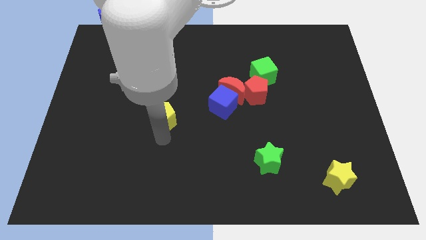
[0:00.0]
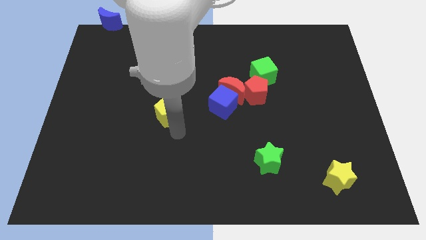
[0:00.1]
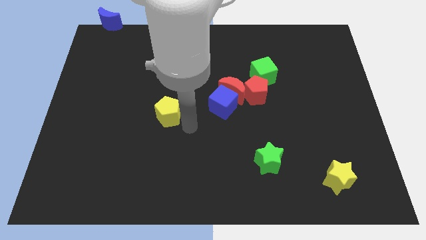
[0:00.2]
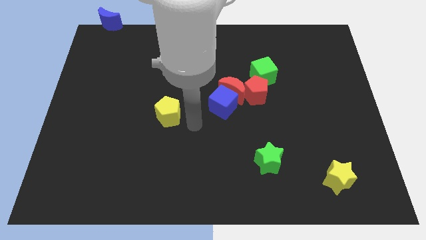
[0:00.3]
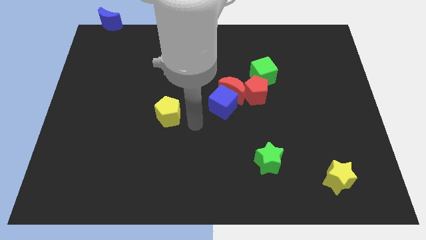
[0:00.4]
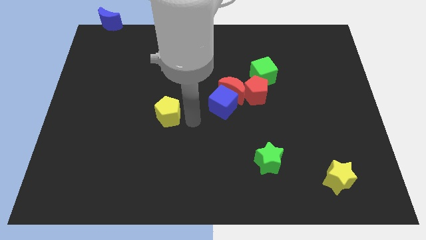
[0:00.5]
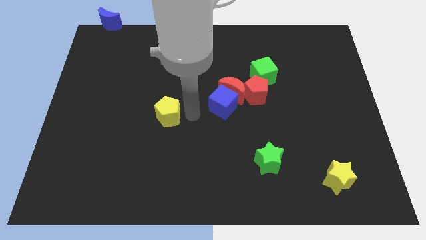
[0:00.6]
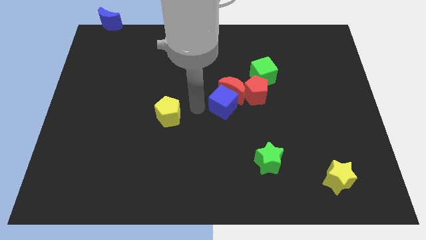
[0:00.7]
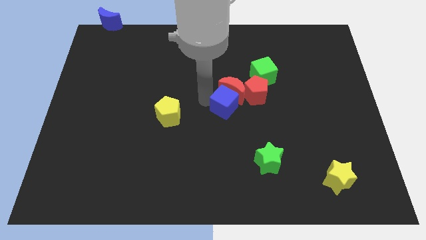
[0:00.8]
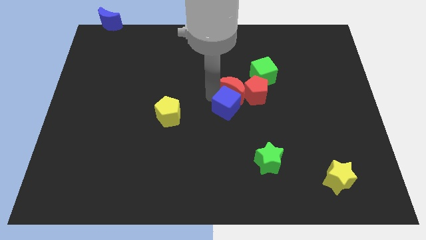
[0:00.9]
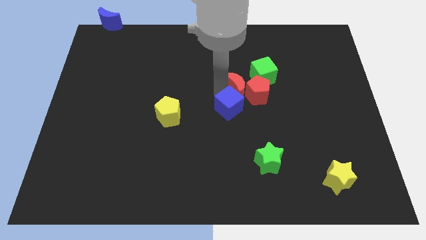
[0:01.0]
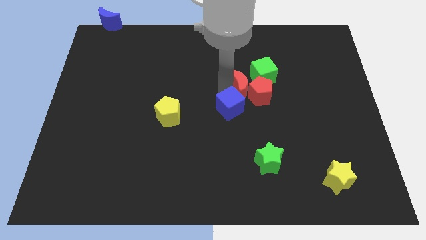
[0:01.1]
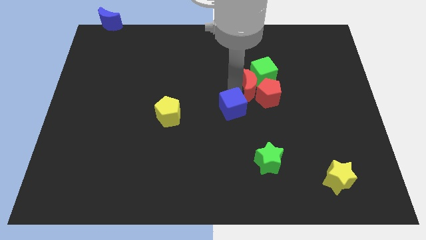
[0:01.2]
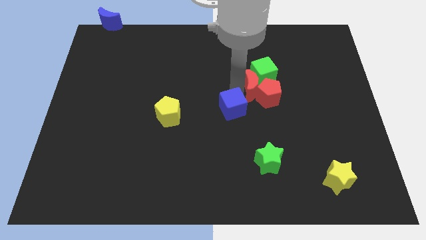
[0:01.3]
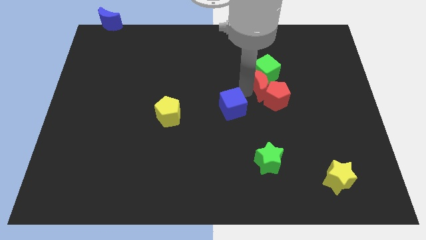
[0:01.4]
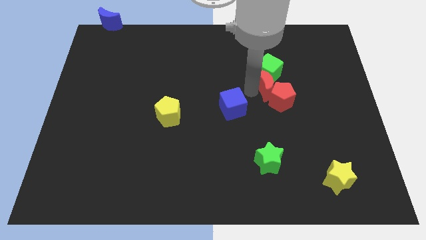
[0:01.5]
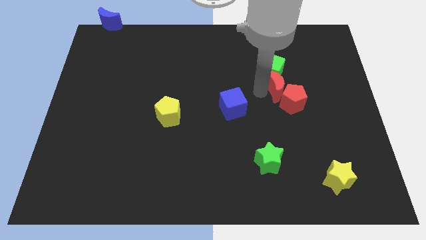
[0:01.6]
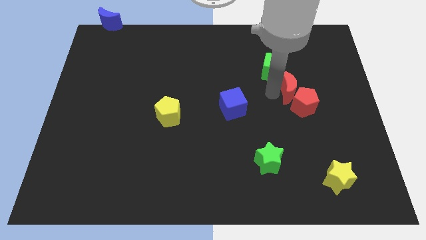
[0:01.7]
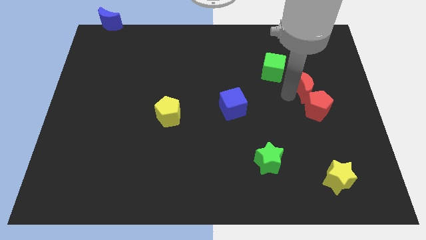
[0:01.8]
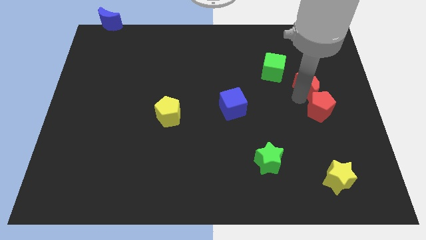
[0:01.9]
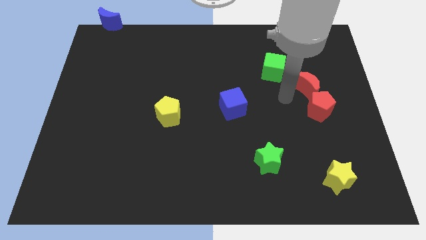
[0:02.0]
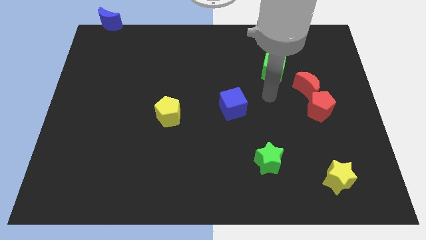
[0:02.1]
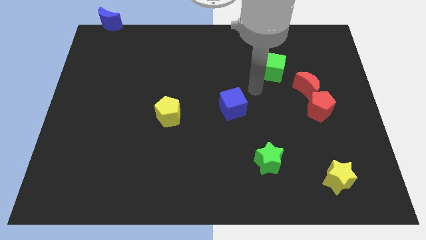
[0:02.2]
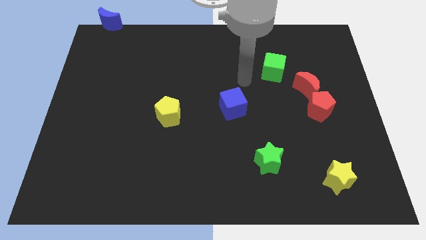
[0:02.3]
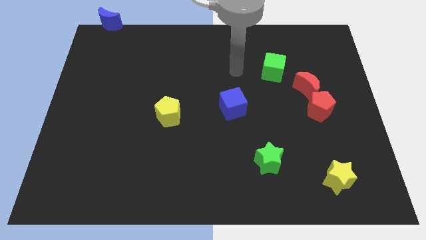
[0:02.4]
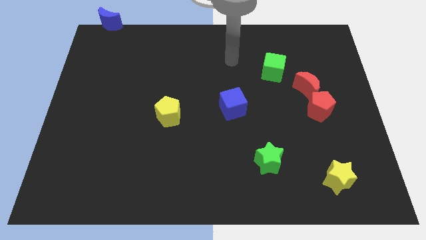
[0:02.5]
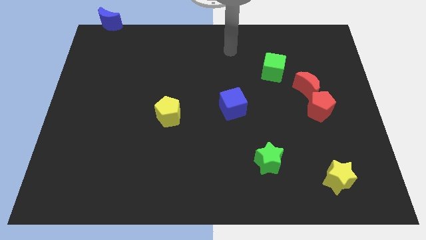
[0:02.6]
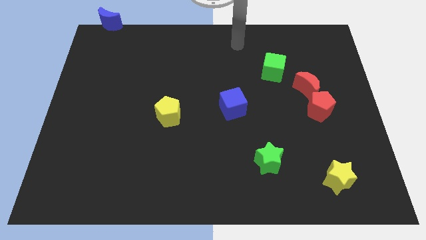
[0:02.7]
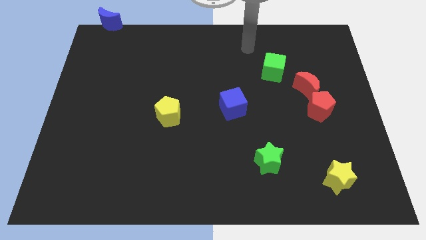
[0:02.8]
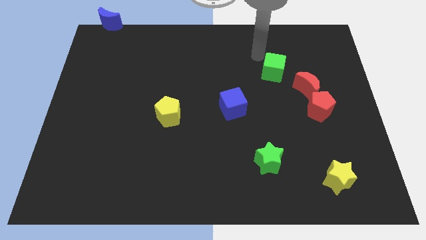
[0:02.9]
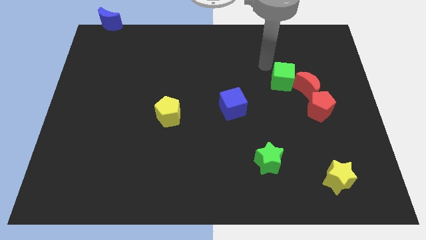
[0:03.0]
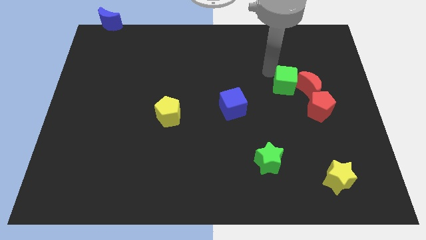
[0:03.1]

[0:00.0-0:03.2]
push both the red blocks towards the center right side

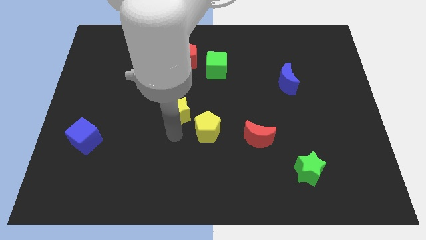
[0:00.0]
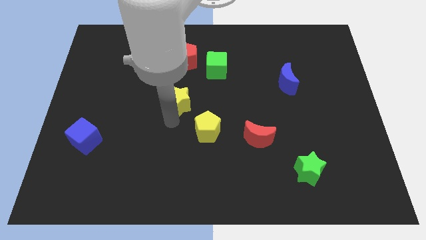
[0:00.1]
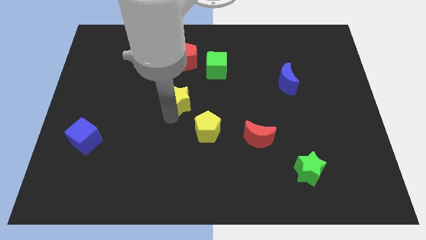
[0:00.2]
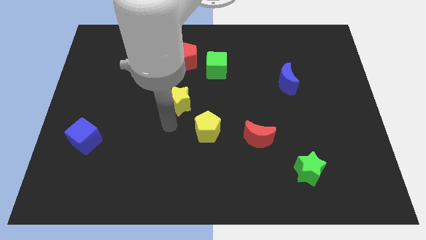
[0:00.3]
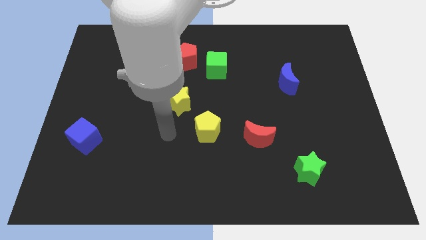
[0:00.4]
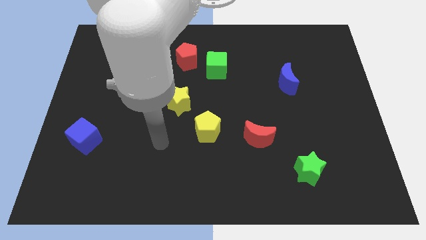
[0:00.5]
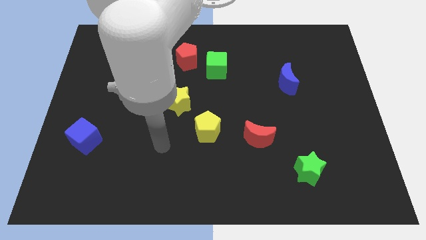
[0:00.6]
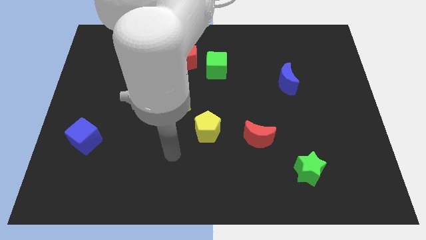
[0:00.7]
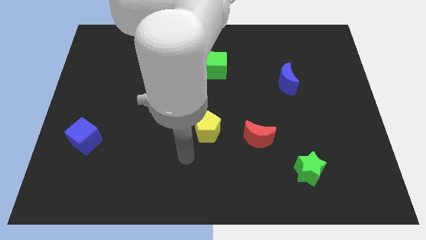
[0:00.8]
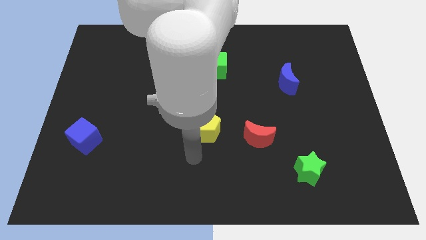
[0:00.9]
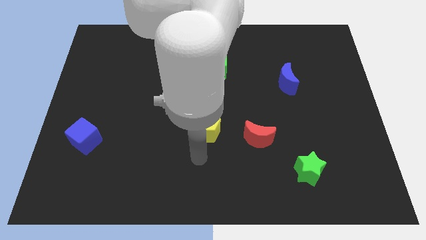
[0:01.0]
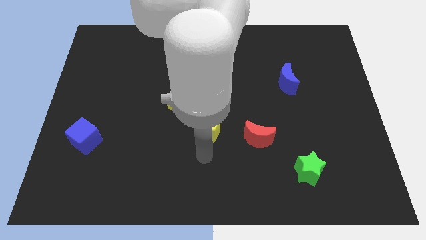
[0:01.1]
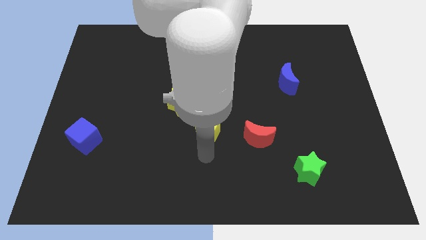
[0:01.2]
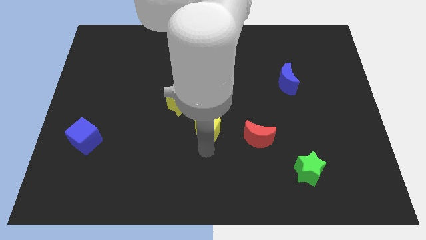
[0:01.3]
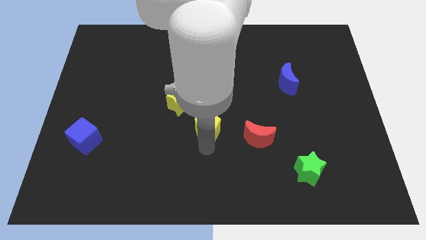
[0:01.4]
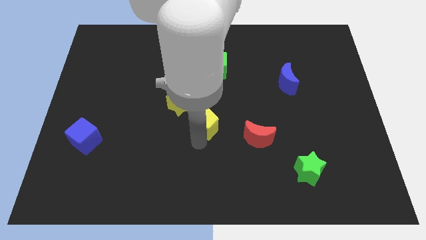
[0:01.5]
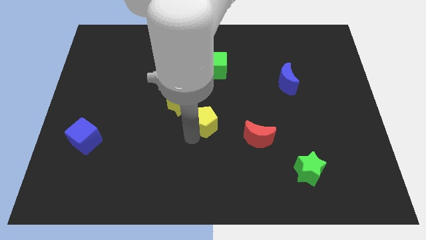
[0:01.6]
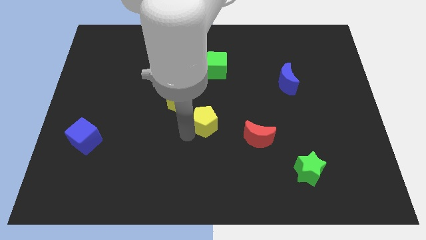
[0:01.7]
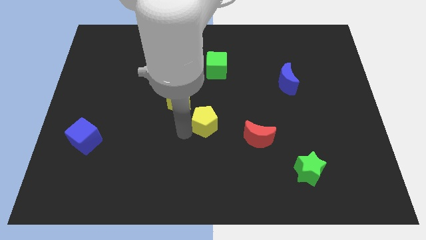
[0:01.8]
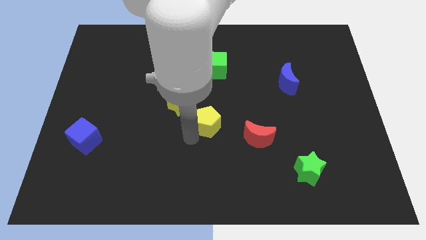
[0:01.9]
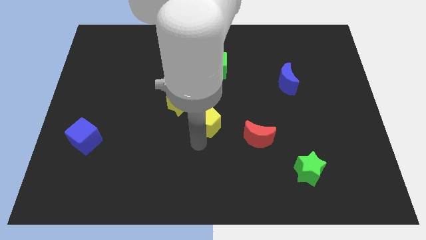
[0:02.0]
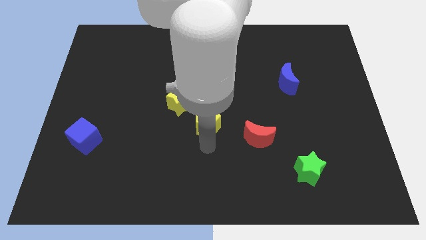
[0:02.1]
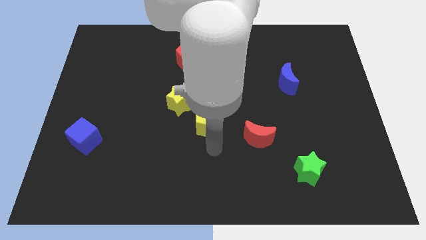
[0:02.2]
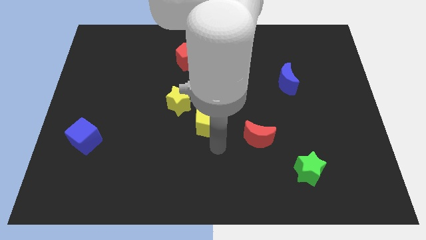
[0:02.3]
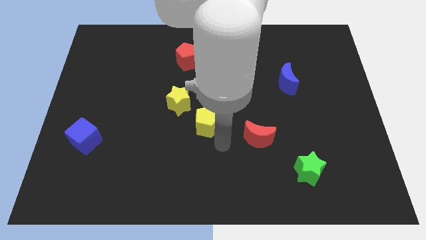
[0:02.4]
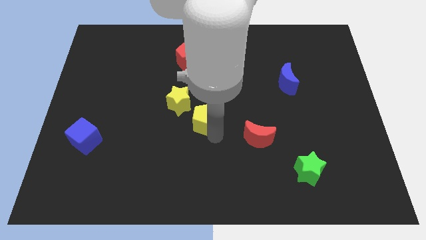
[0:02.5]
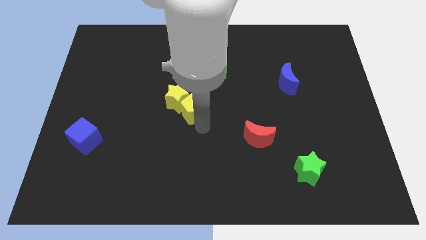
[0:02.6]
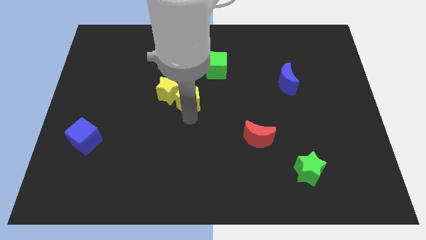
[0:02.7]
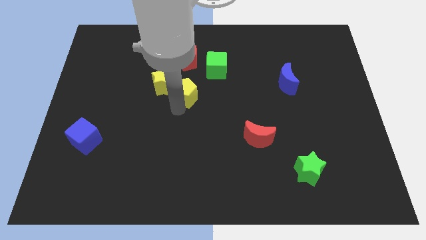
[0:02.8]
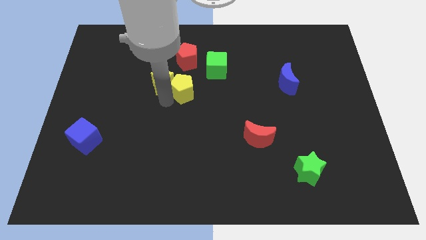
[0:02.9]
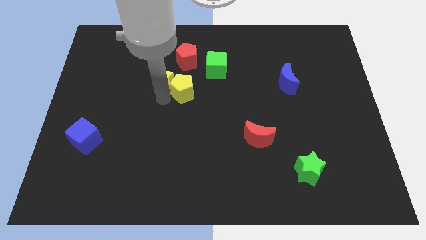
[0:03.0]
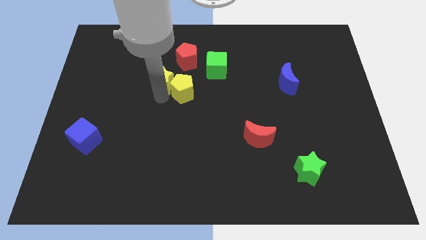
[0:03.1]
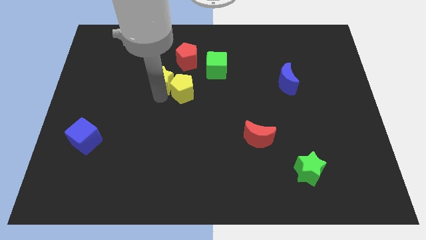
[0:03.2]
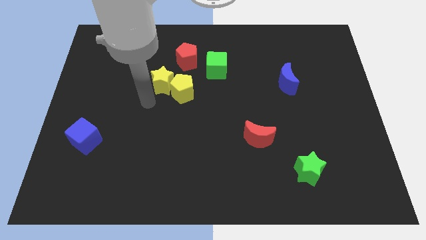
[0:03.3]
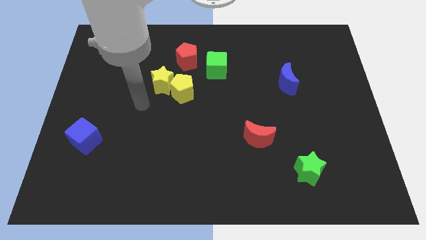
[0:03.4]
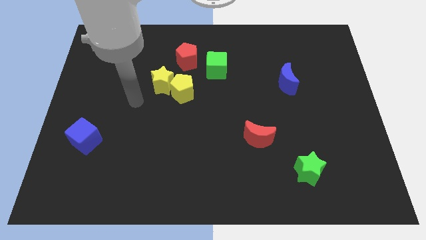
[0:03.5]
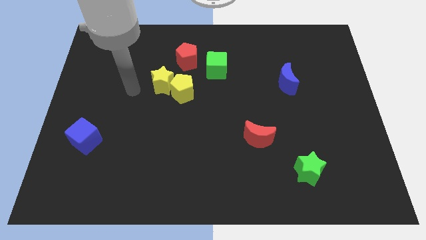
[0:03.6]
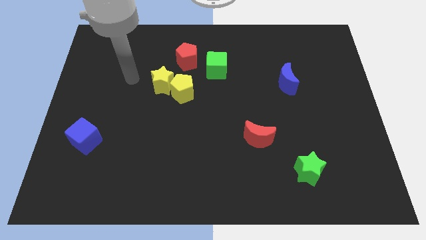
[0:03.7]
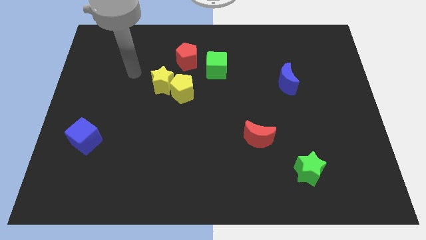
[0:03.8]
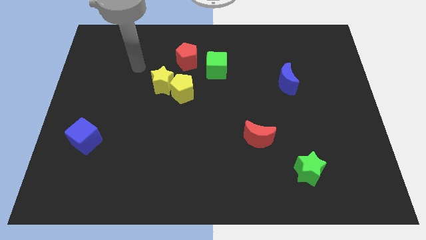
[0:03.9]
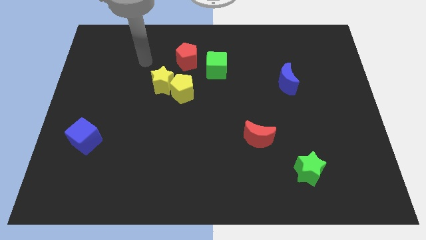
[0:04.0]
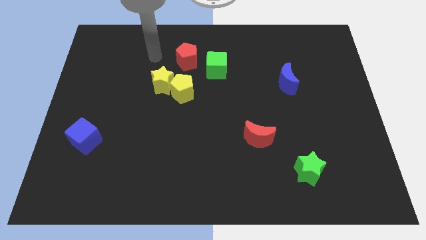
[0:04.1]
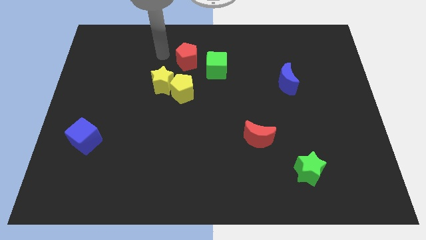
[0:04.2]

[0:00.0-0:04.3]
move the yellow blocks towards red pentagon

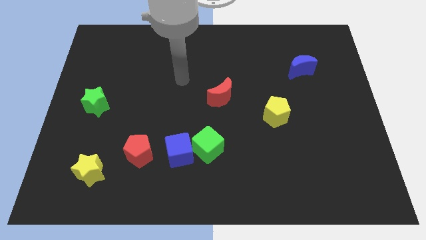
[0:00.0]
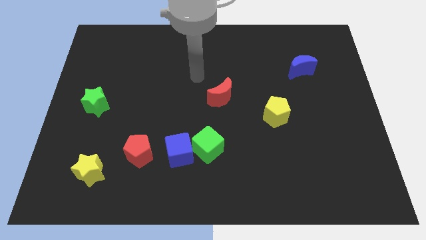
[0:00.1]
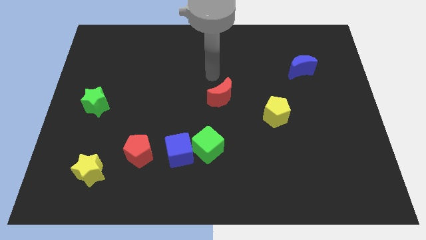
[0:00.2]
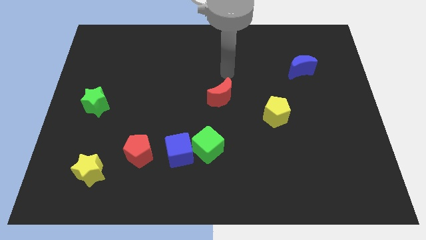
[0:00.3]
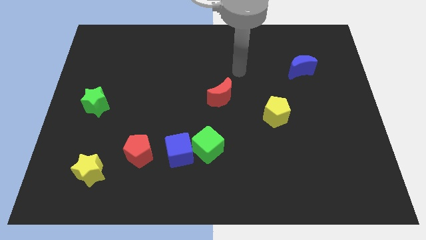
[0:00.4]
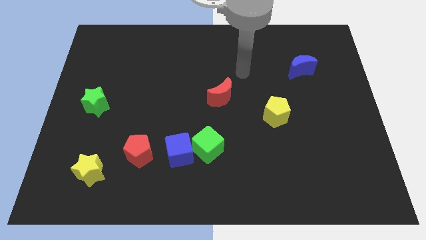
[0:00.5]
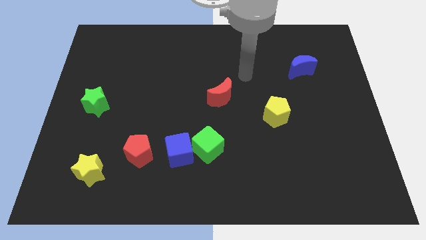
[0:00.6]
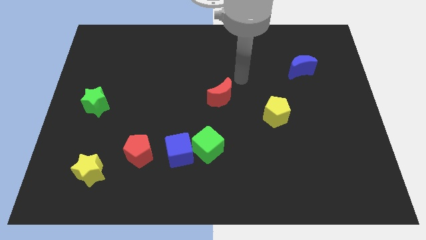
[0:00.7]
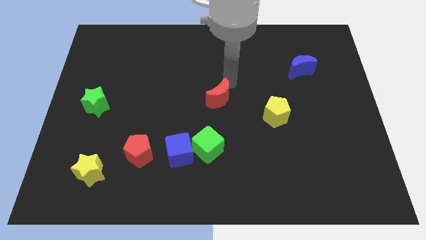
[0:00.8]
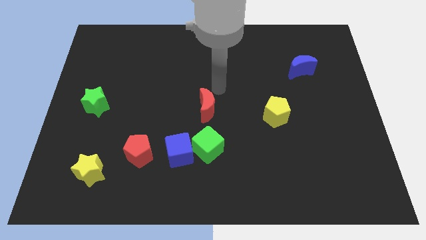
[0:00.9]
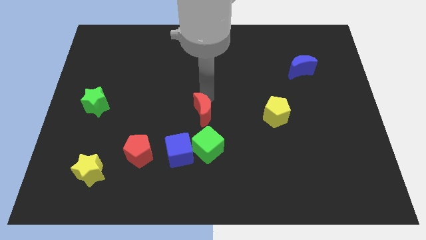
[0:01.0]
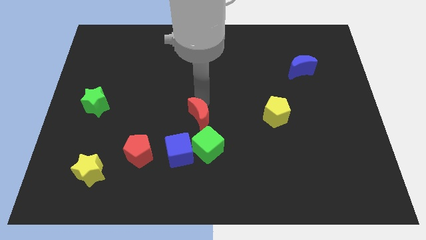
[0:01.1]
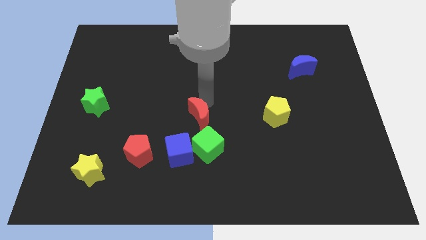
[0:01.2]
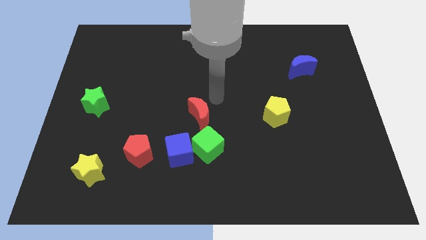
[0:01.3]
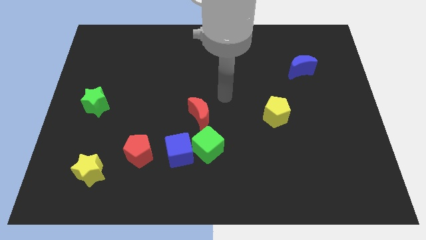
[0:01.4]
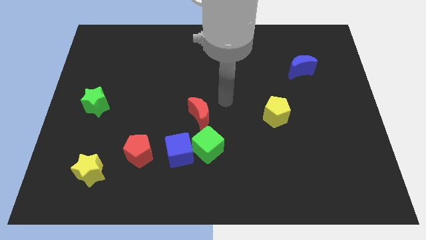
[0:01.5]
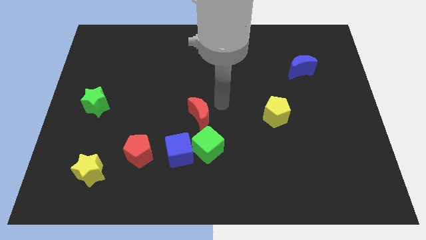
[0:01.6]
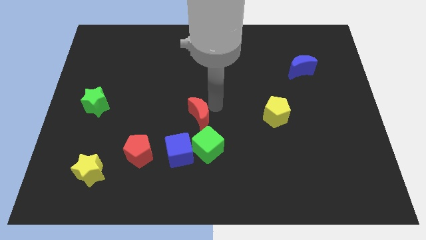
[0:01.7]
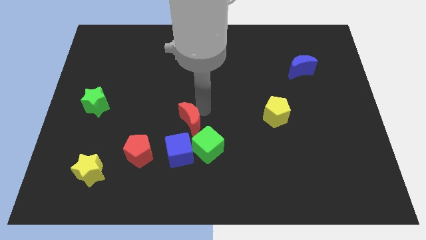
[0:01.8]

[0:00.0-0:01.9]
place the red crescent towards the top left side of the green cube
